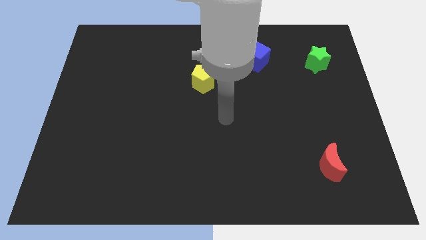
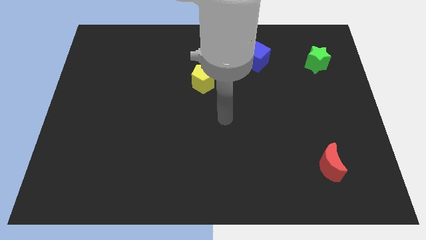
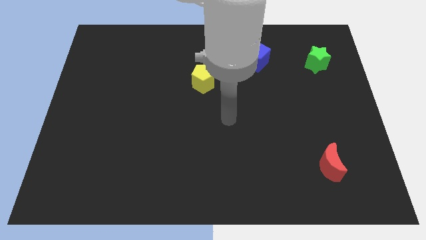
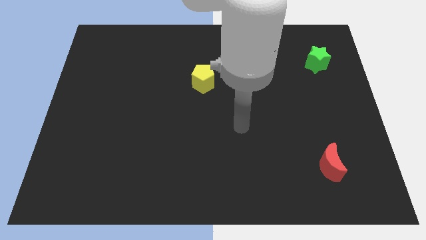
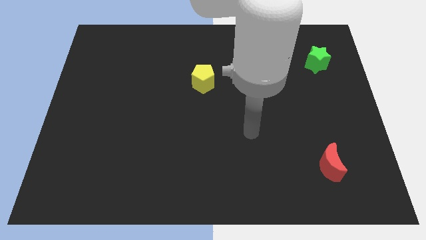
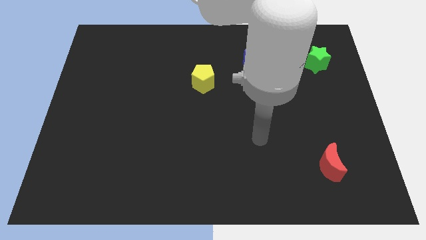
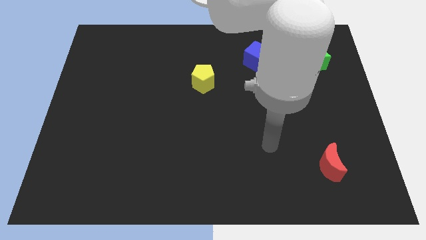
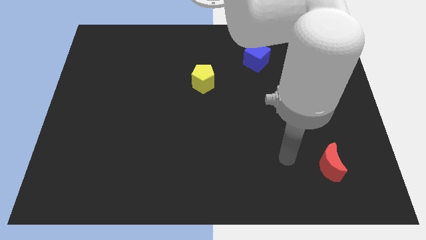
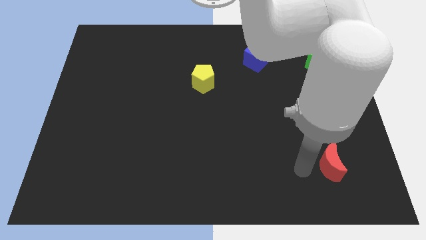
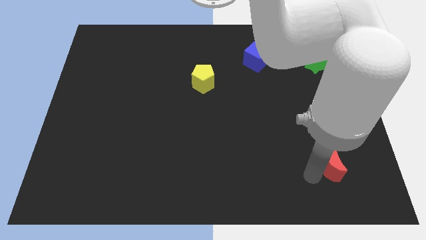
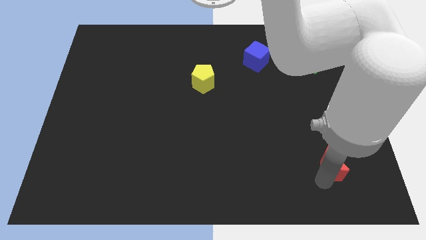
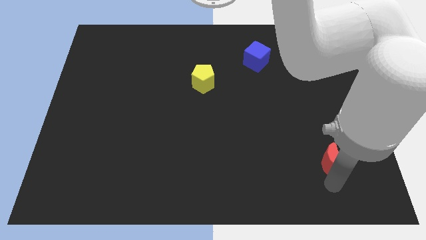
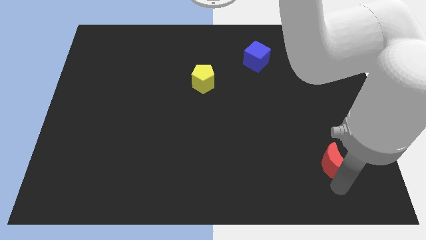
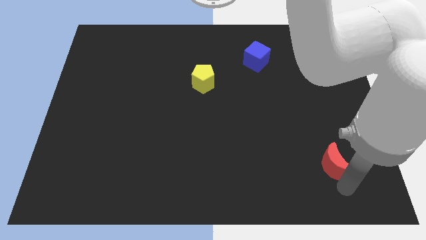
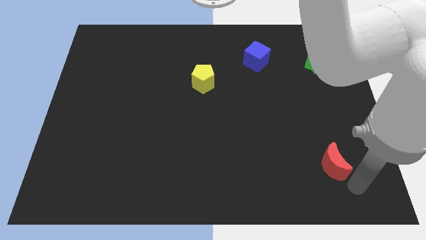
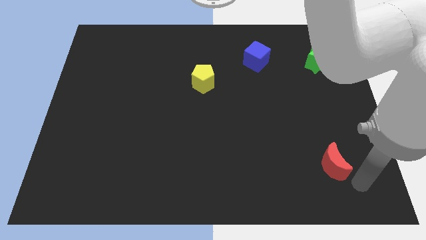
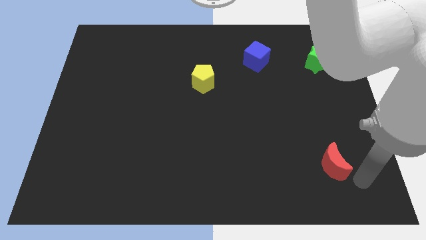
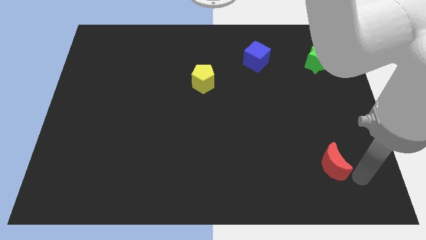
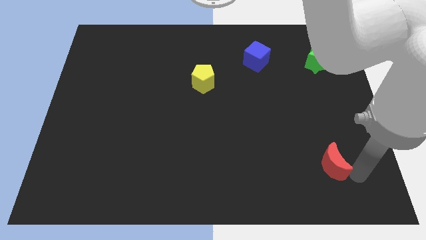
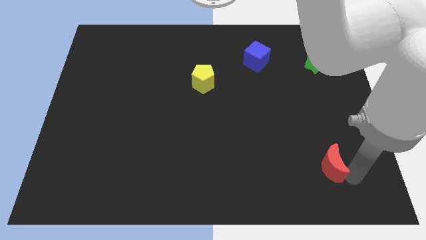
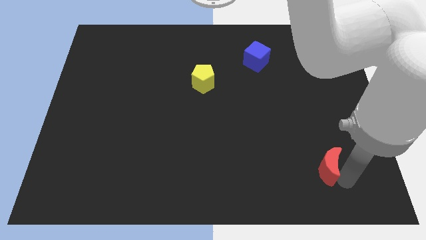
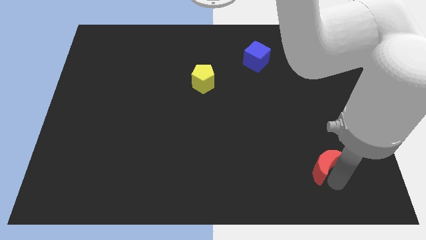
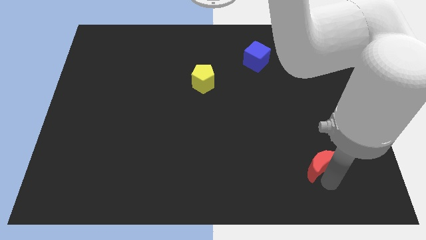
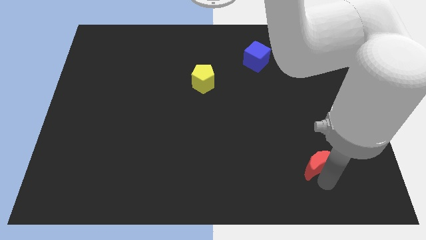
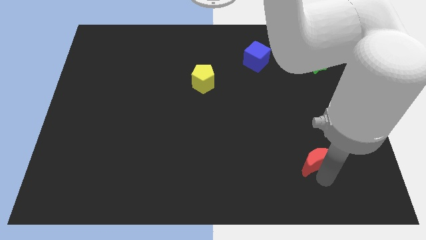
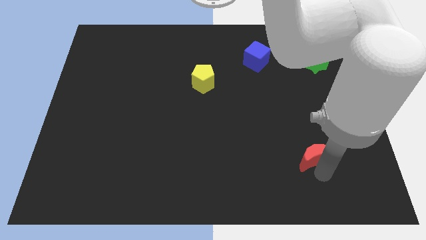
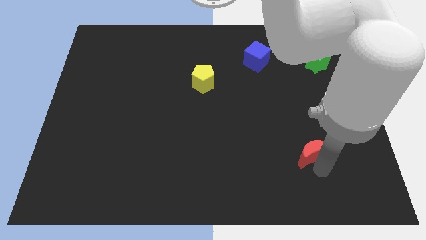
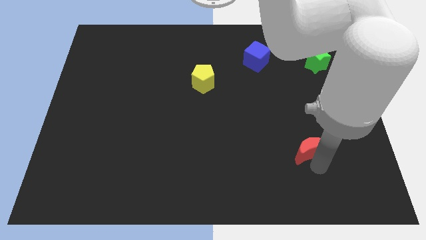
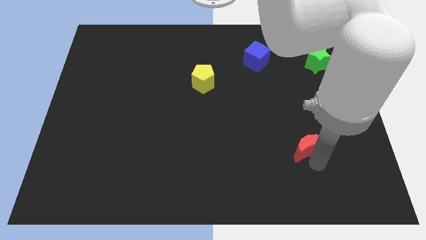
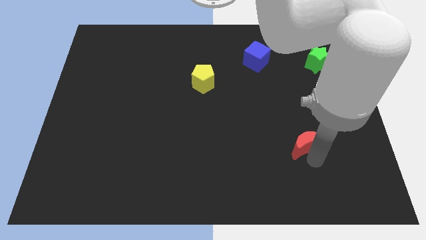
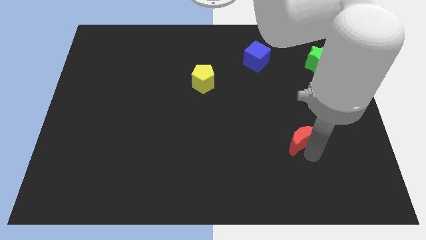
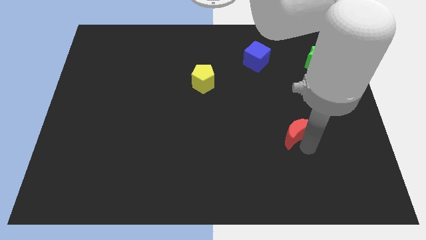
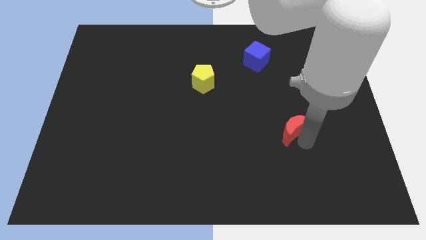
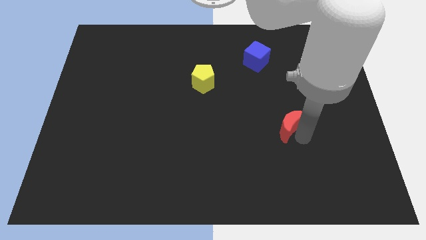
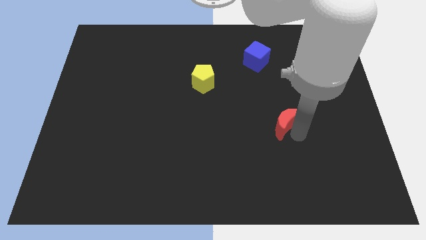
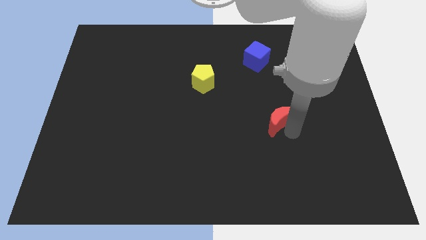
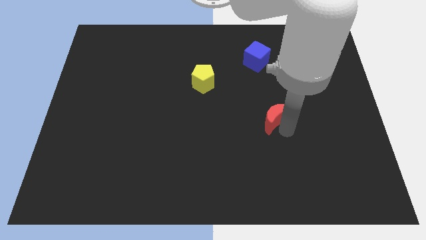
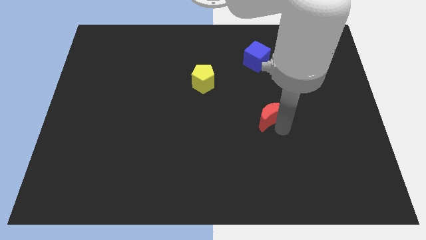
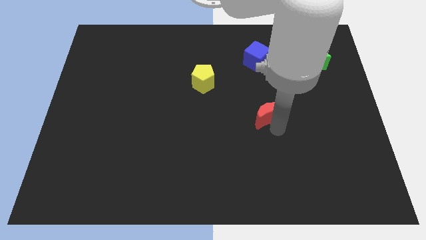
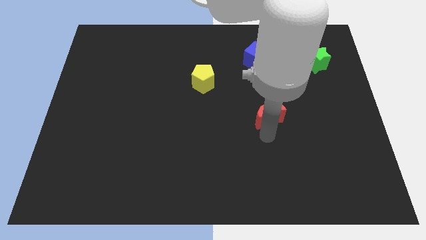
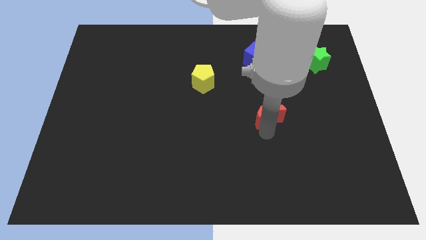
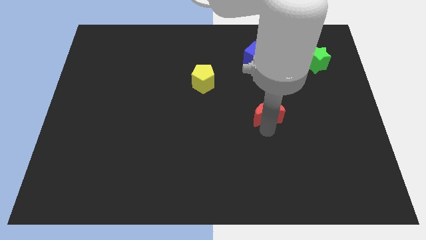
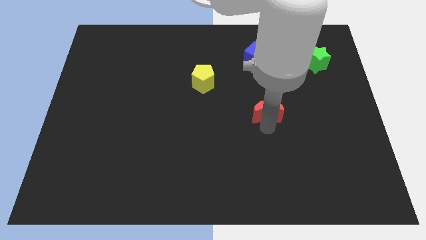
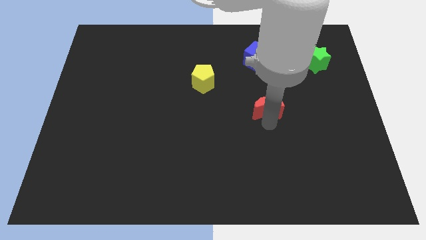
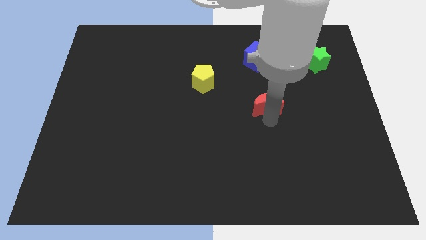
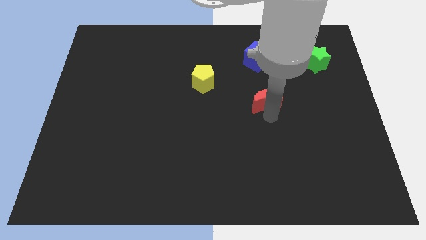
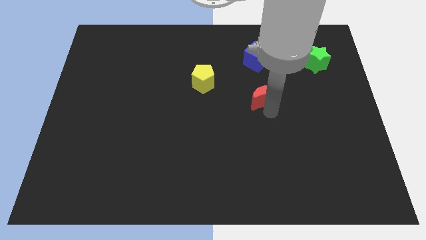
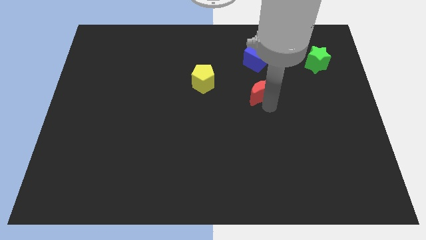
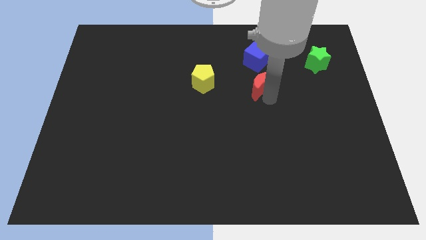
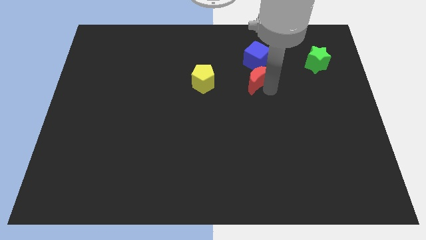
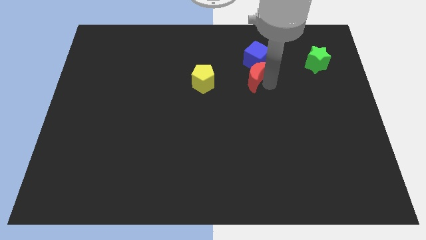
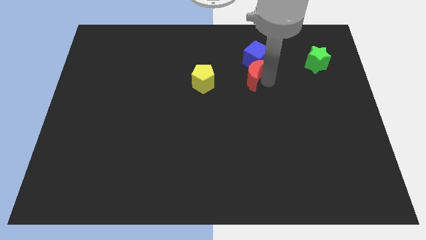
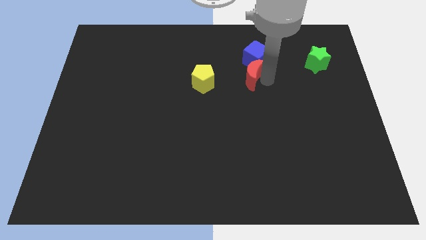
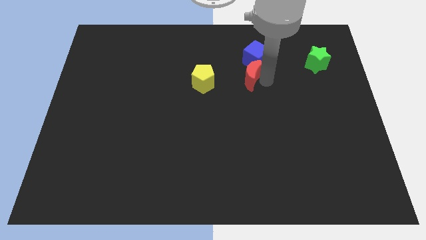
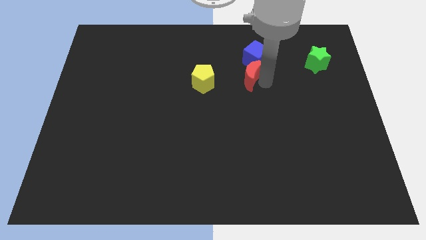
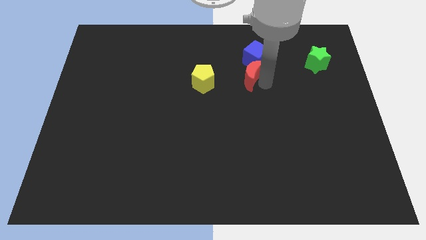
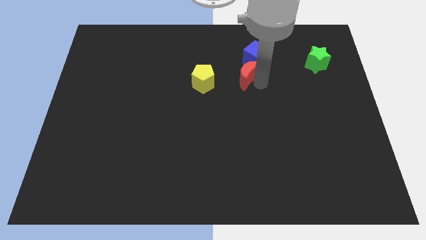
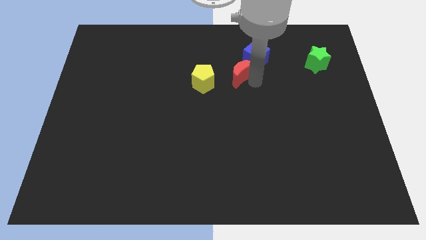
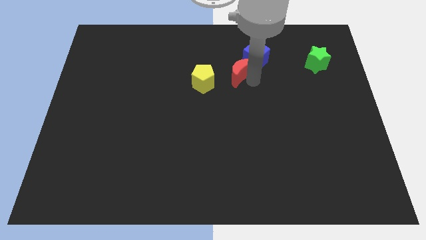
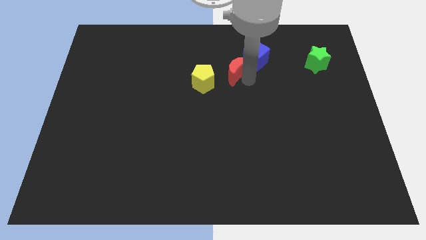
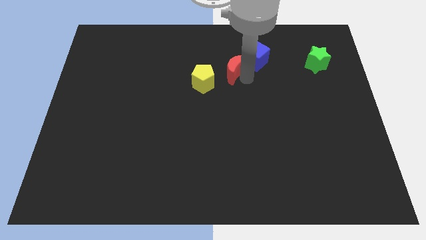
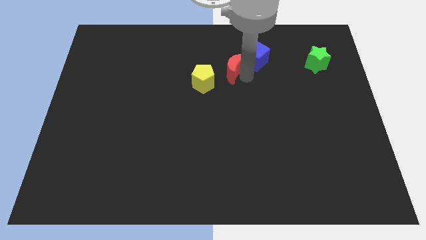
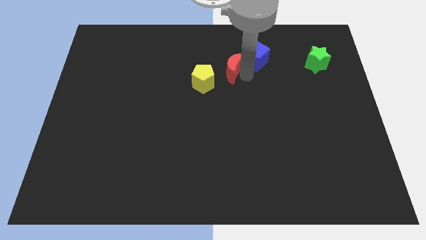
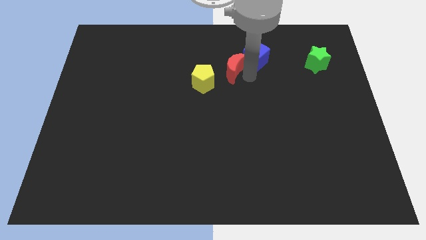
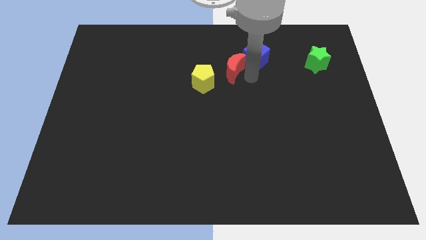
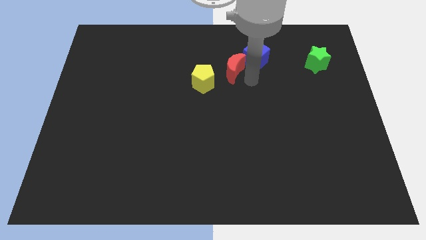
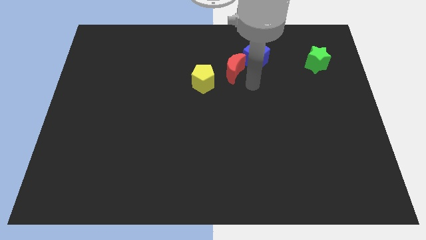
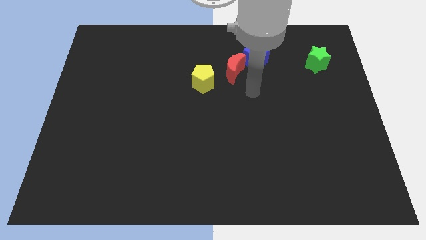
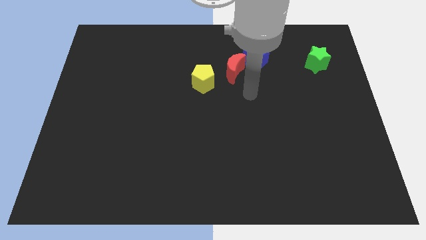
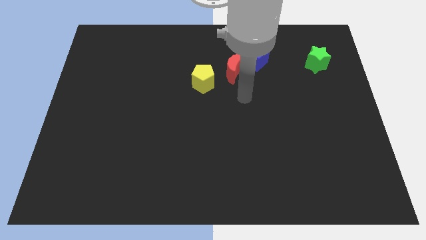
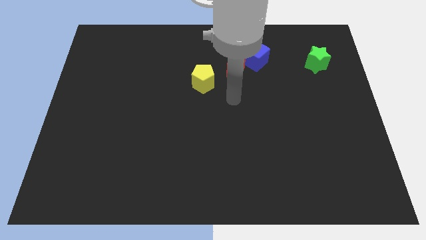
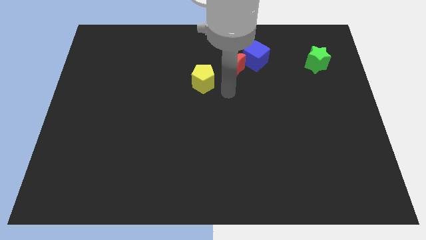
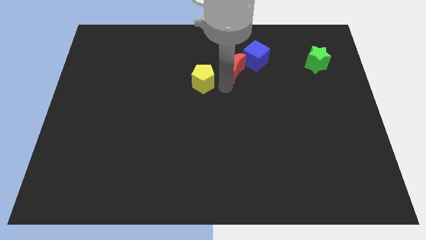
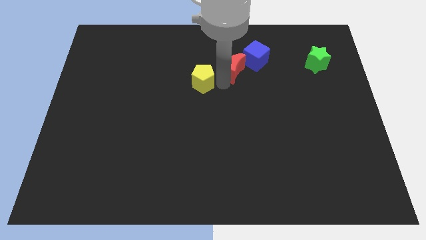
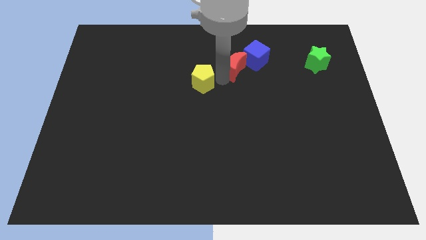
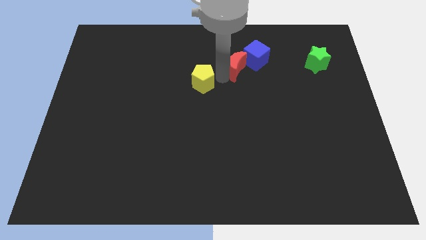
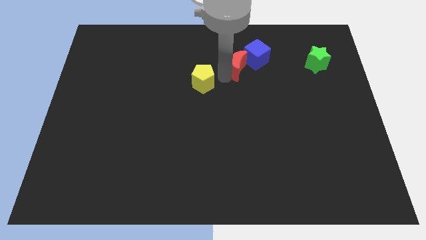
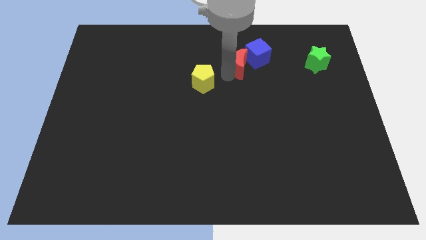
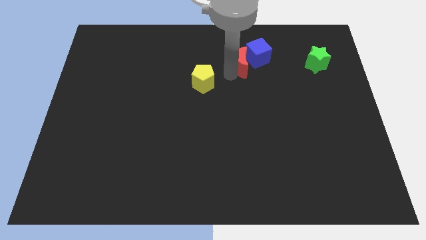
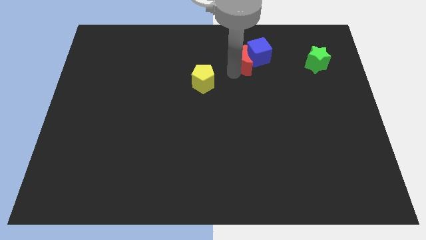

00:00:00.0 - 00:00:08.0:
slide the red moon to the blue block

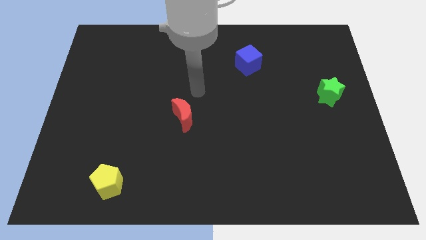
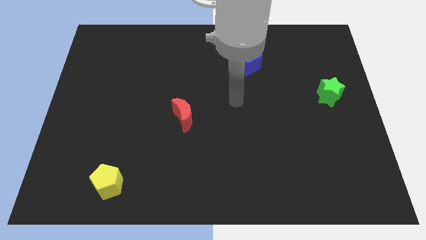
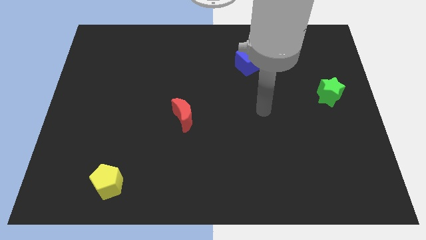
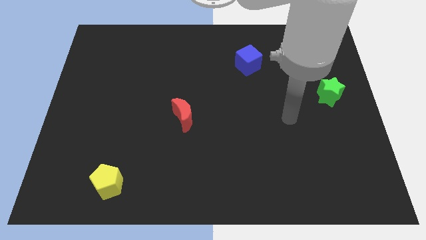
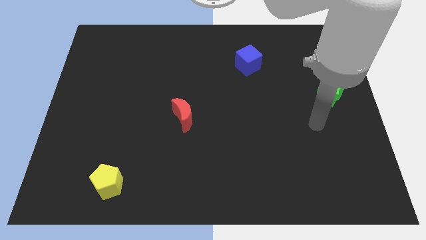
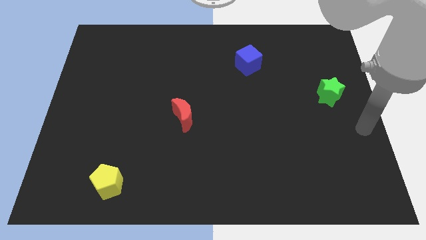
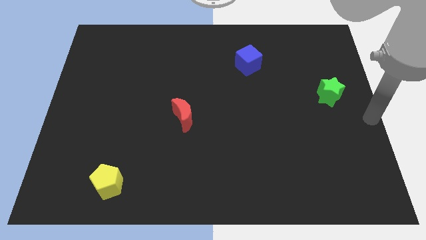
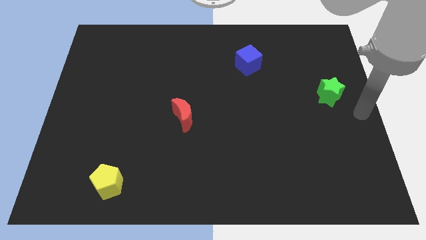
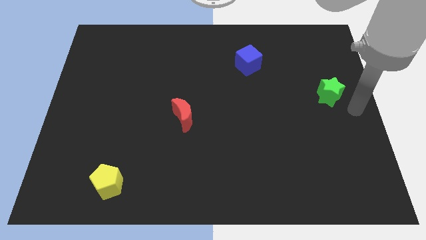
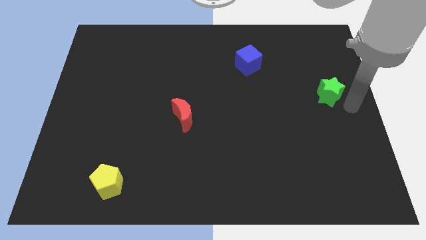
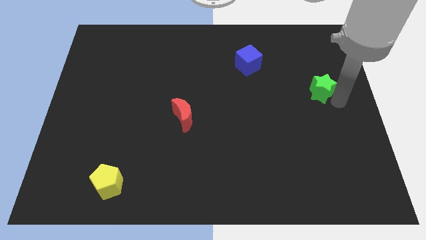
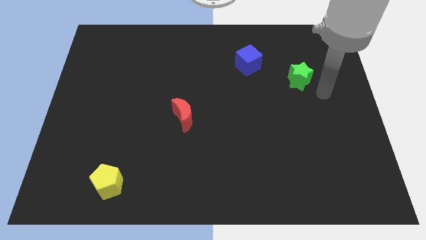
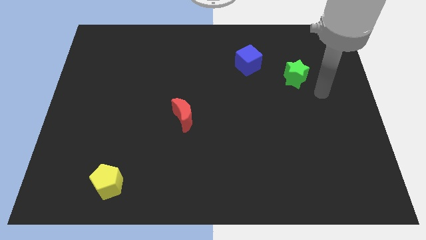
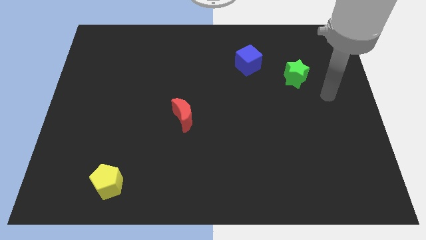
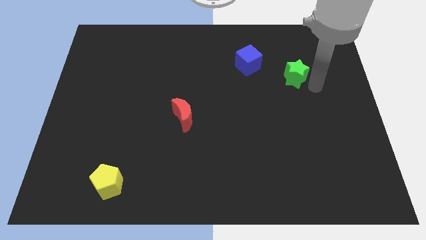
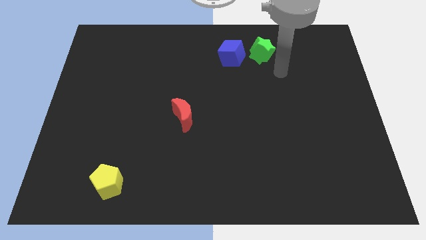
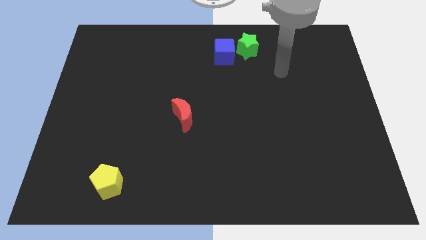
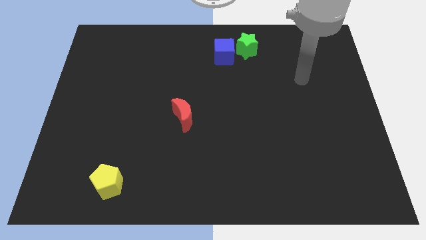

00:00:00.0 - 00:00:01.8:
push the green block next to the blue block
